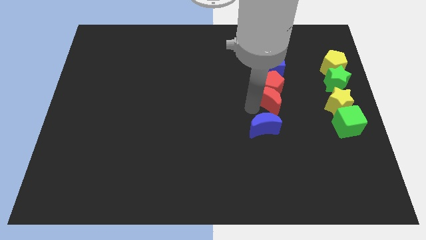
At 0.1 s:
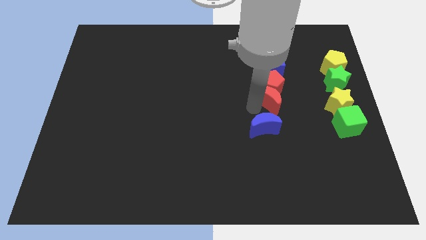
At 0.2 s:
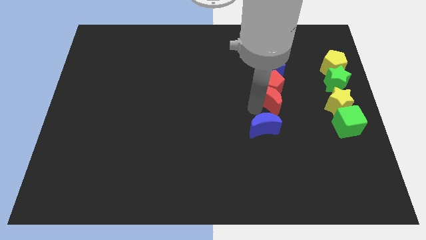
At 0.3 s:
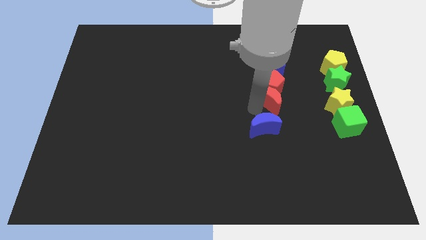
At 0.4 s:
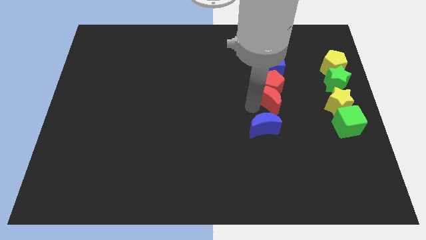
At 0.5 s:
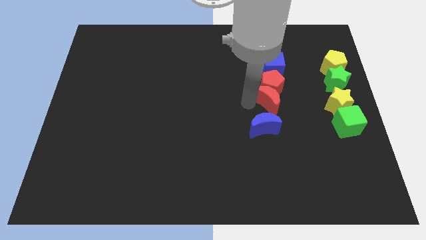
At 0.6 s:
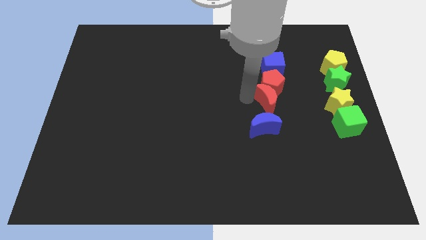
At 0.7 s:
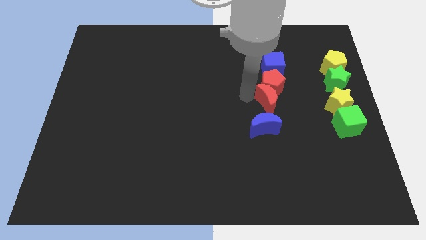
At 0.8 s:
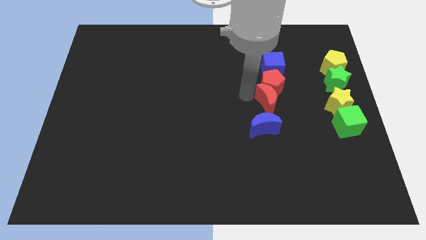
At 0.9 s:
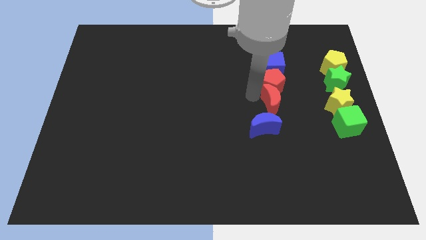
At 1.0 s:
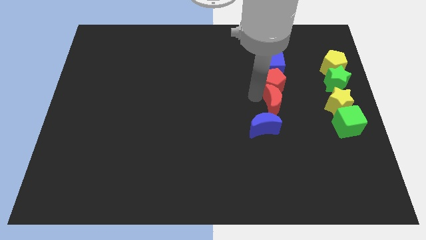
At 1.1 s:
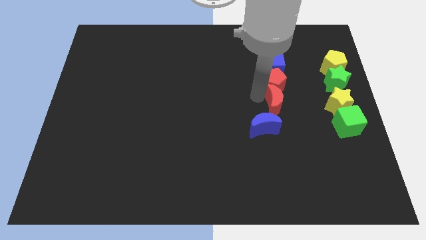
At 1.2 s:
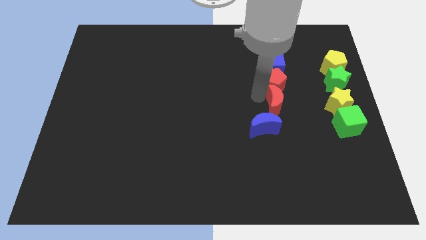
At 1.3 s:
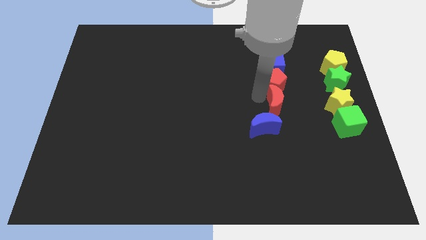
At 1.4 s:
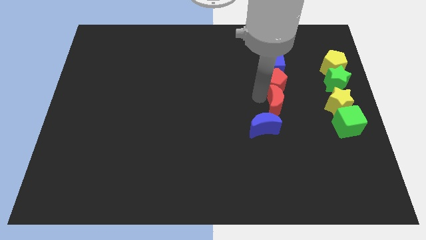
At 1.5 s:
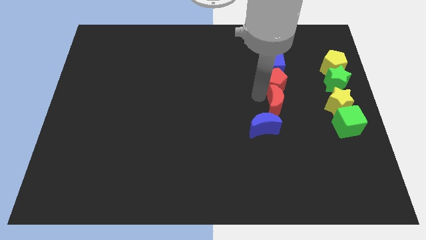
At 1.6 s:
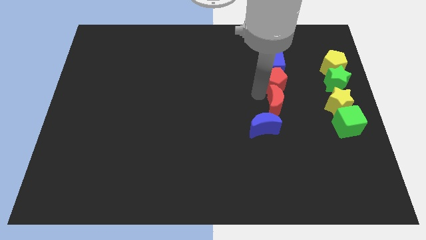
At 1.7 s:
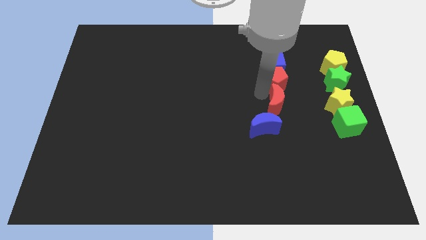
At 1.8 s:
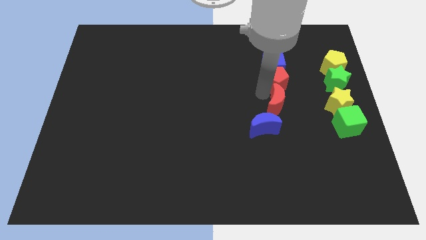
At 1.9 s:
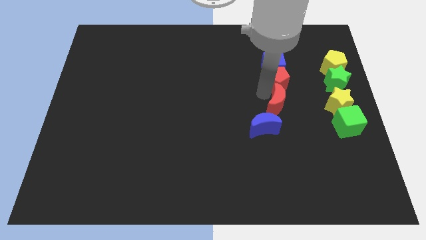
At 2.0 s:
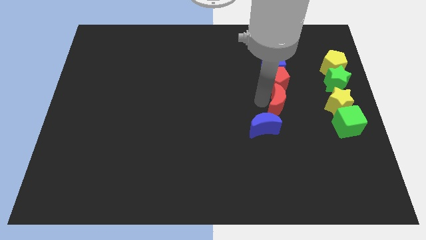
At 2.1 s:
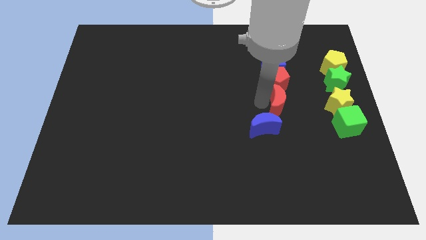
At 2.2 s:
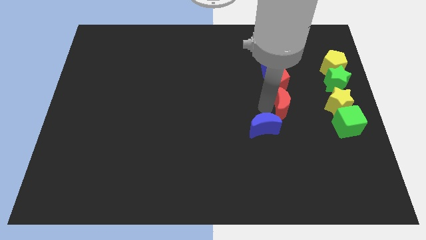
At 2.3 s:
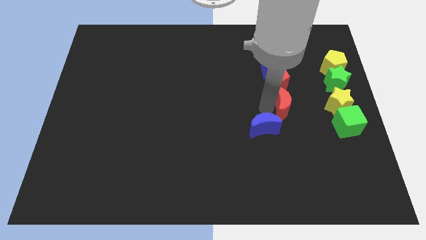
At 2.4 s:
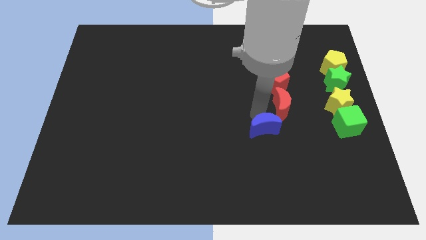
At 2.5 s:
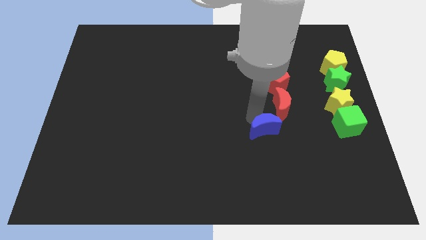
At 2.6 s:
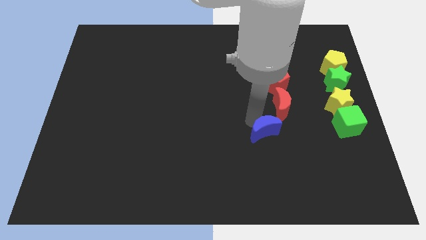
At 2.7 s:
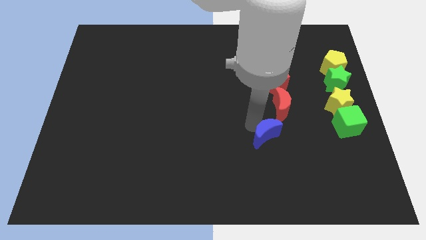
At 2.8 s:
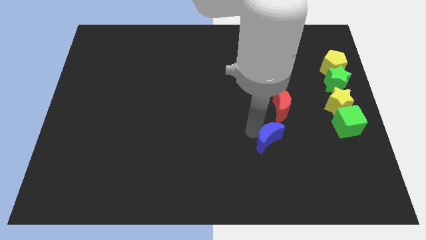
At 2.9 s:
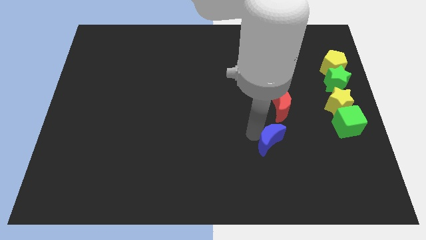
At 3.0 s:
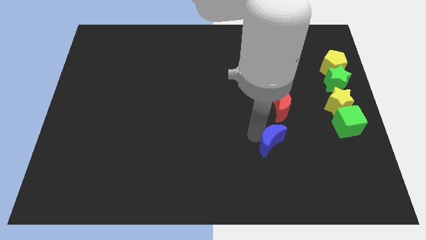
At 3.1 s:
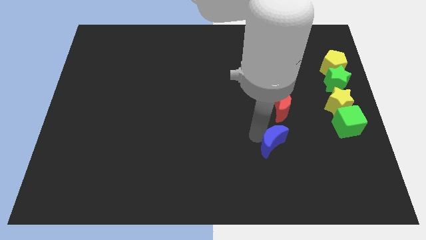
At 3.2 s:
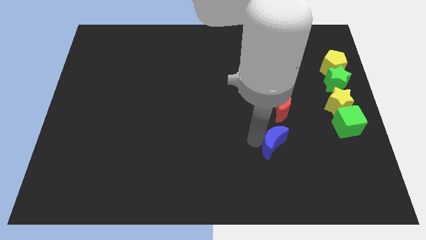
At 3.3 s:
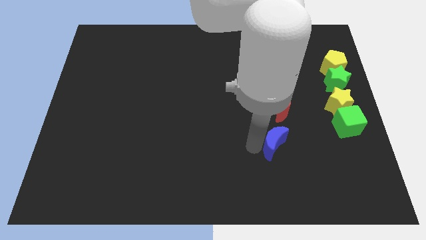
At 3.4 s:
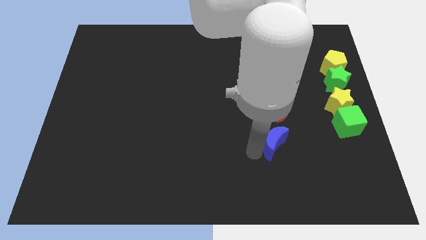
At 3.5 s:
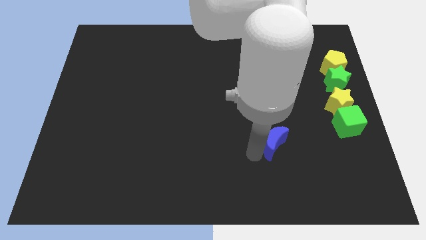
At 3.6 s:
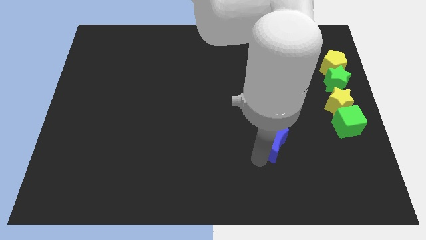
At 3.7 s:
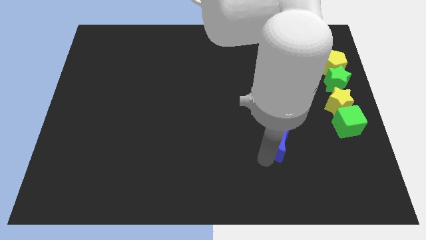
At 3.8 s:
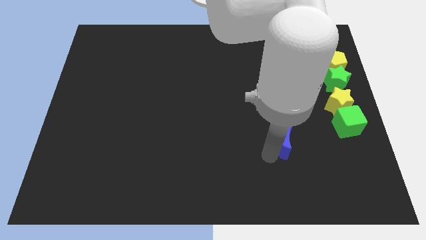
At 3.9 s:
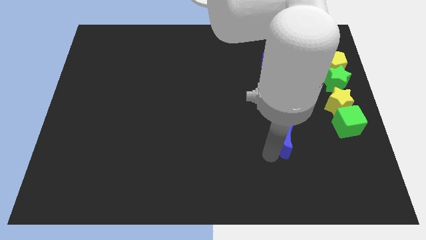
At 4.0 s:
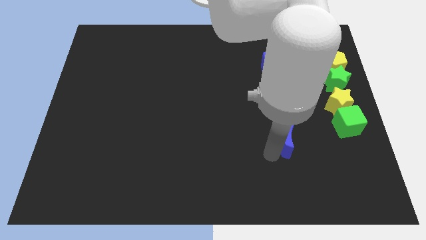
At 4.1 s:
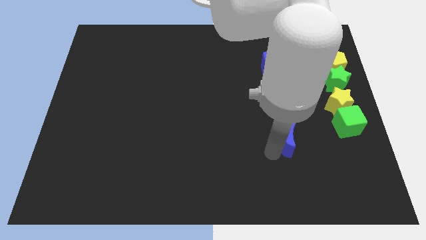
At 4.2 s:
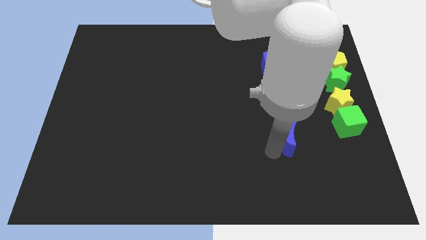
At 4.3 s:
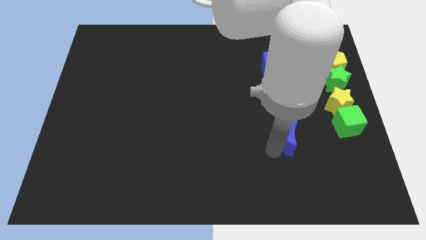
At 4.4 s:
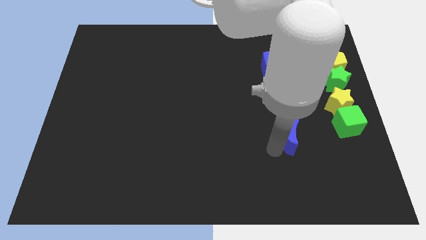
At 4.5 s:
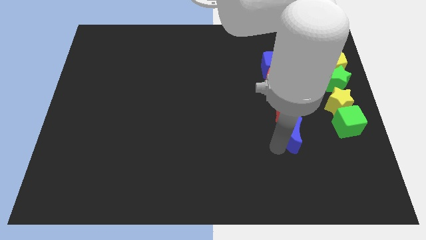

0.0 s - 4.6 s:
adjust the red moon and blue moon at the bottom side of the red pentagon

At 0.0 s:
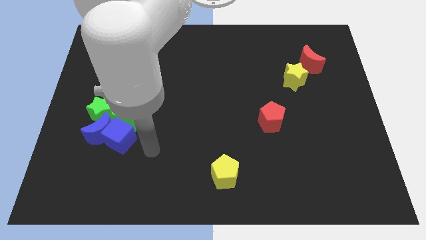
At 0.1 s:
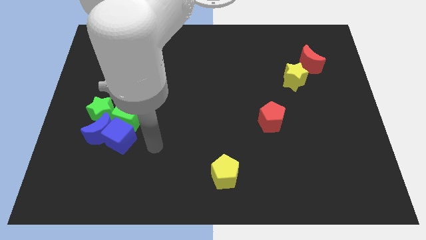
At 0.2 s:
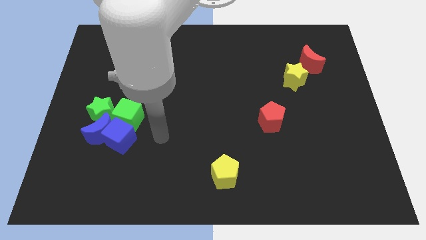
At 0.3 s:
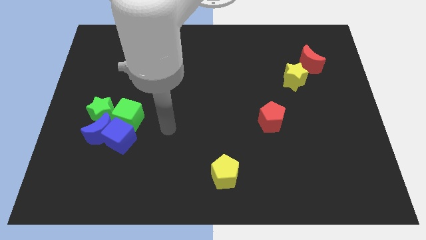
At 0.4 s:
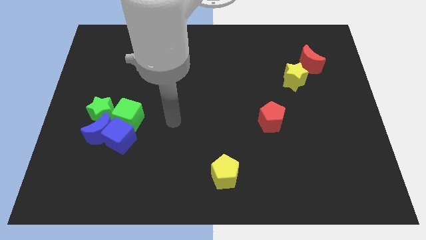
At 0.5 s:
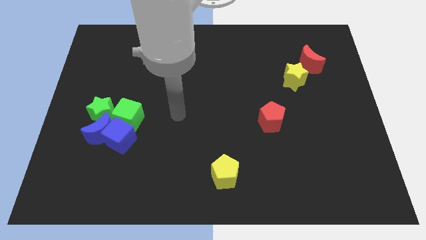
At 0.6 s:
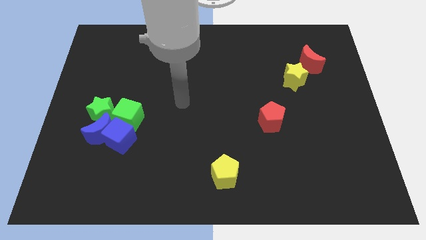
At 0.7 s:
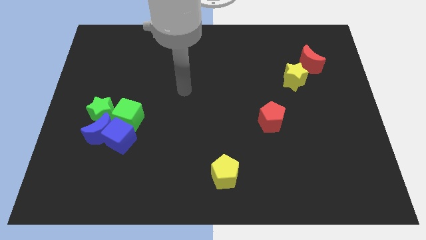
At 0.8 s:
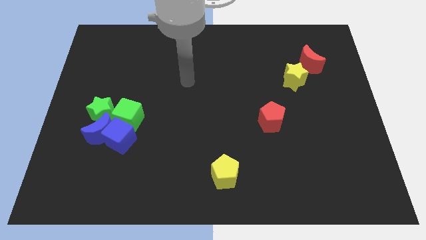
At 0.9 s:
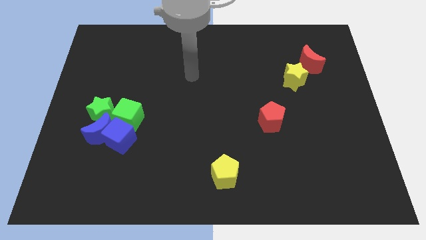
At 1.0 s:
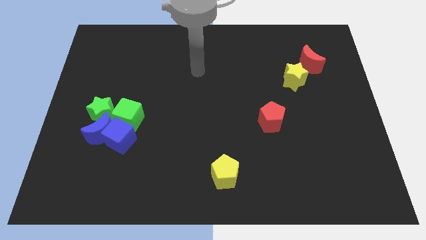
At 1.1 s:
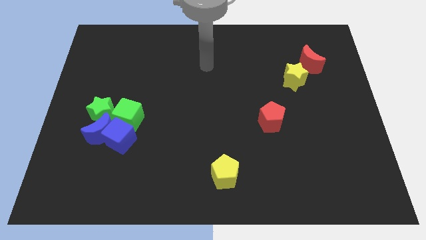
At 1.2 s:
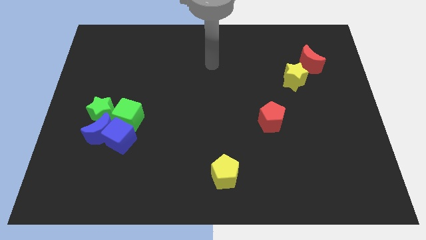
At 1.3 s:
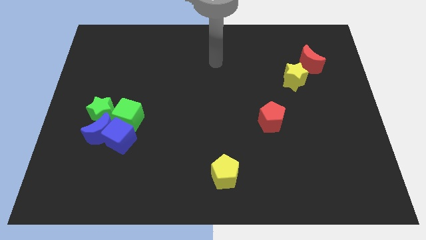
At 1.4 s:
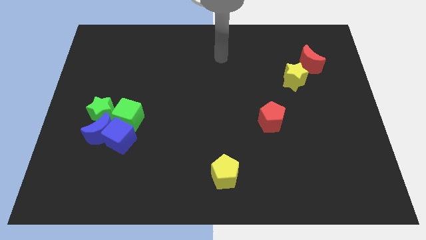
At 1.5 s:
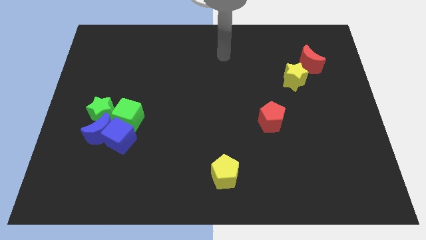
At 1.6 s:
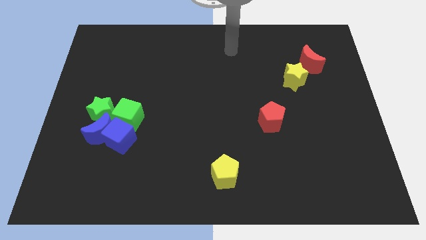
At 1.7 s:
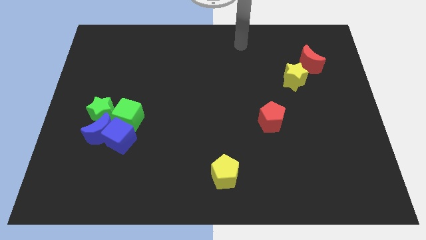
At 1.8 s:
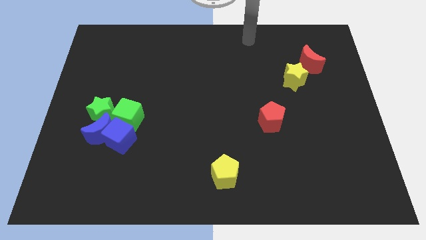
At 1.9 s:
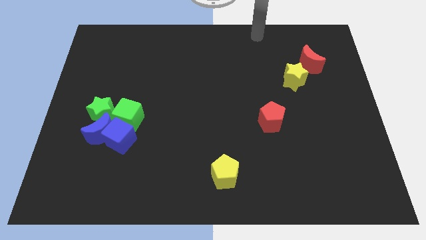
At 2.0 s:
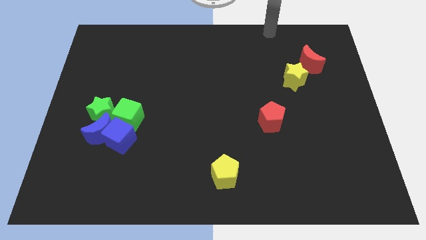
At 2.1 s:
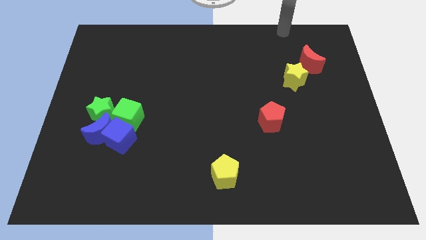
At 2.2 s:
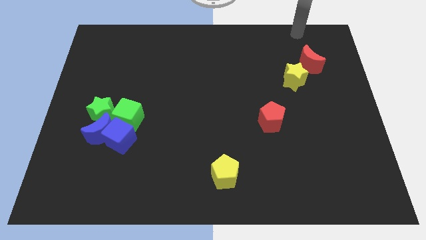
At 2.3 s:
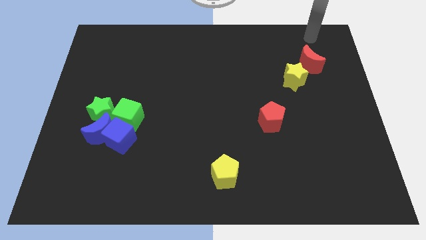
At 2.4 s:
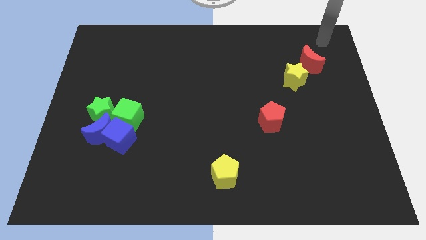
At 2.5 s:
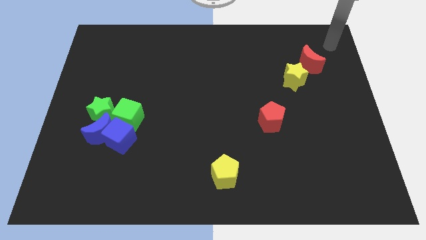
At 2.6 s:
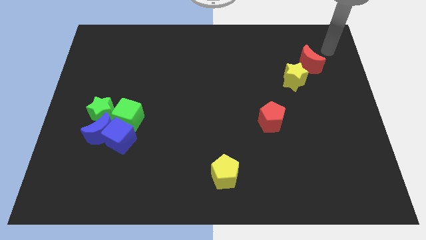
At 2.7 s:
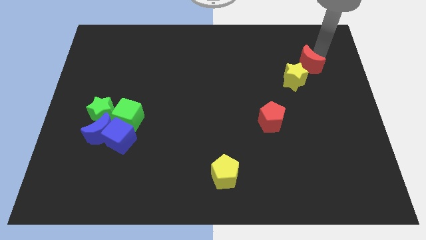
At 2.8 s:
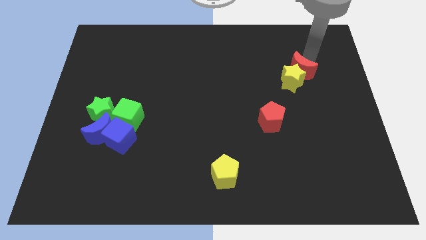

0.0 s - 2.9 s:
move the red crescent into the yellow star

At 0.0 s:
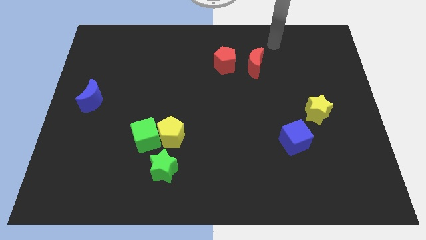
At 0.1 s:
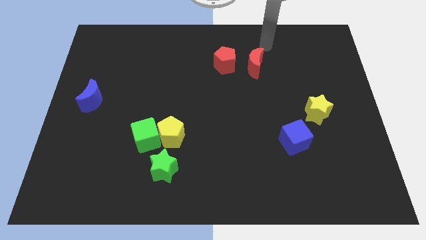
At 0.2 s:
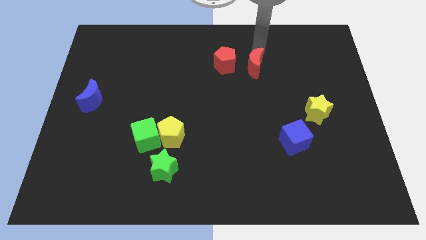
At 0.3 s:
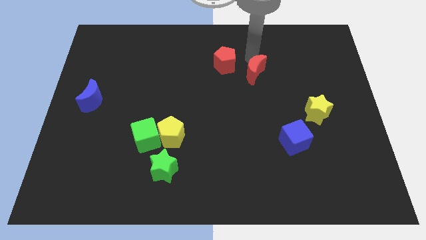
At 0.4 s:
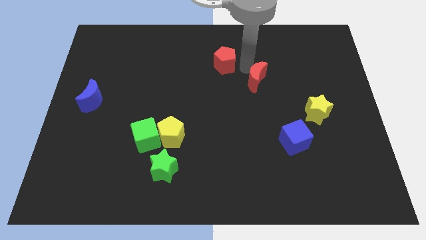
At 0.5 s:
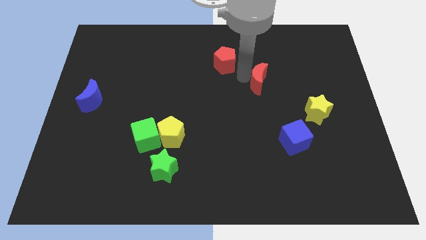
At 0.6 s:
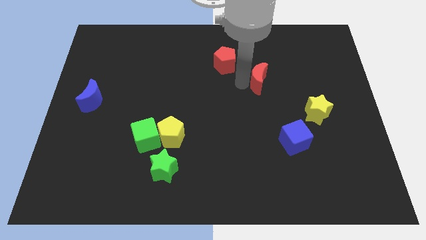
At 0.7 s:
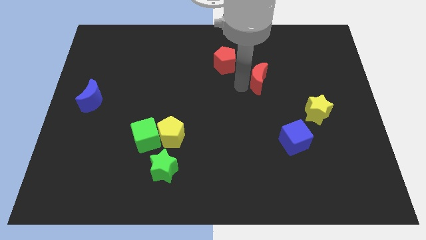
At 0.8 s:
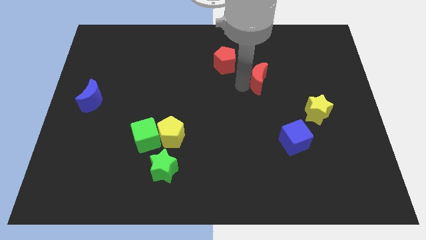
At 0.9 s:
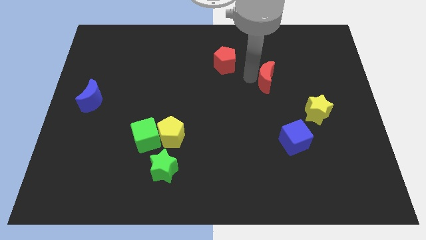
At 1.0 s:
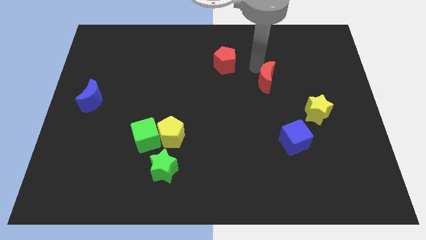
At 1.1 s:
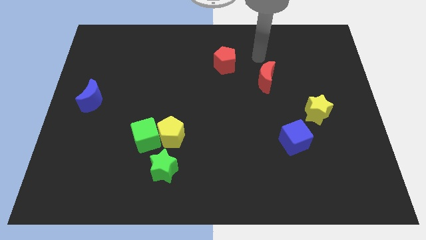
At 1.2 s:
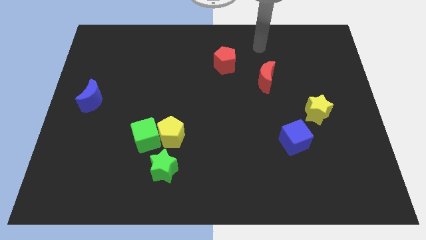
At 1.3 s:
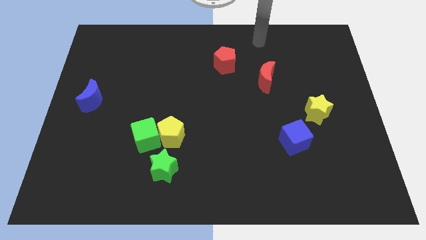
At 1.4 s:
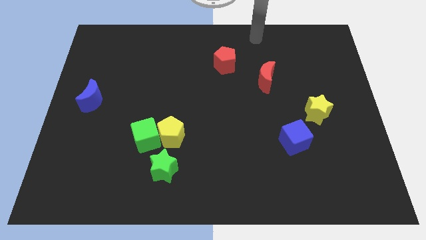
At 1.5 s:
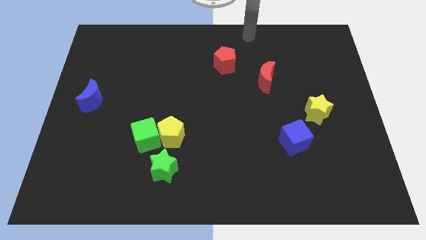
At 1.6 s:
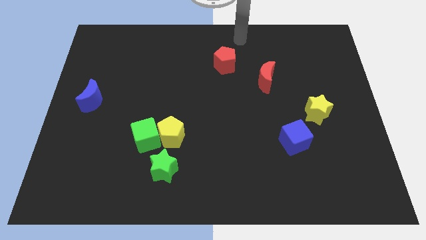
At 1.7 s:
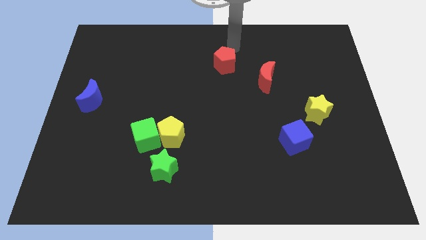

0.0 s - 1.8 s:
move the red crescent towards the yellow star
